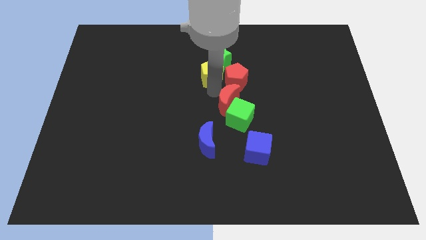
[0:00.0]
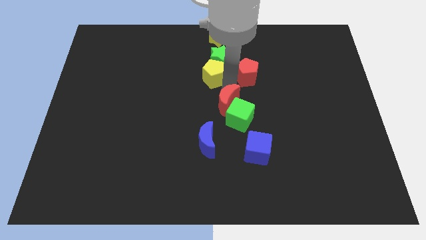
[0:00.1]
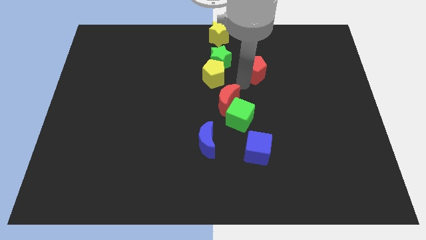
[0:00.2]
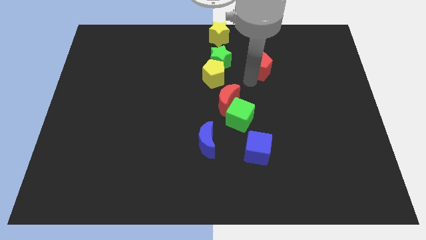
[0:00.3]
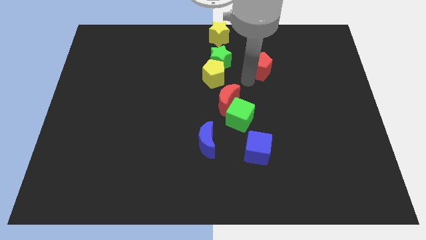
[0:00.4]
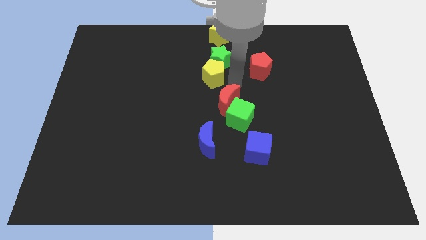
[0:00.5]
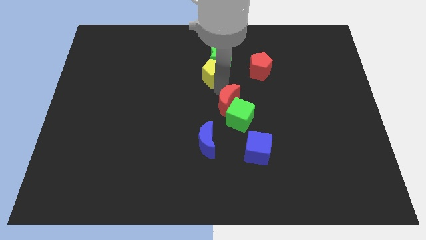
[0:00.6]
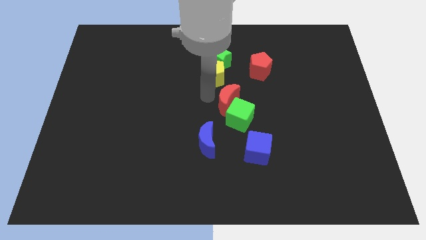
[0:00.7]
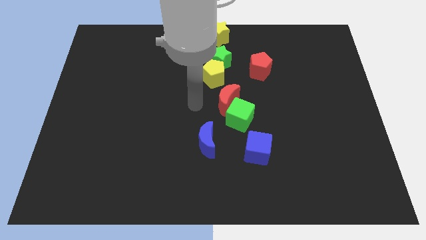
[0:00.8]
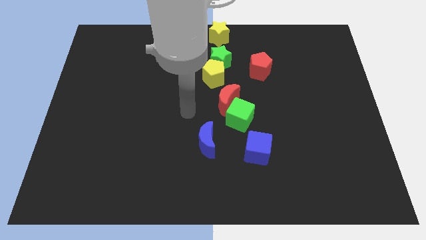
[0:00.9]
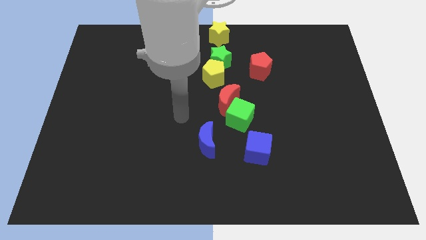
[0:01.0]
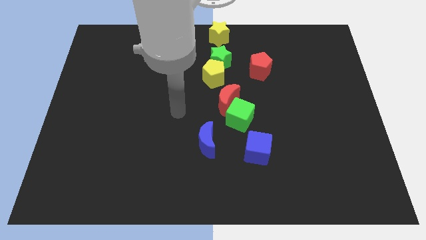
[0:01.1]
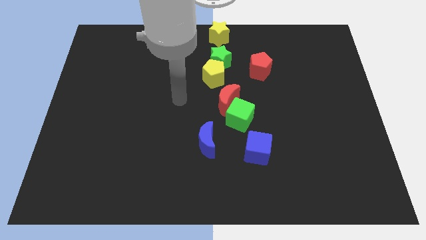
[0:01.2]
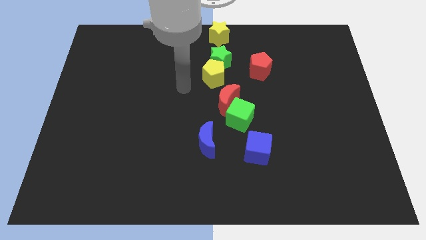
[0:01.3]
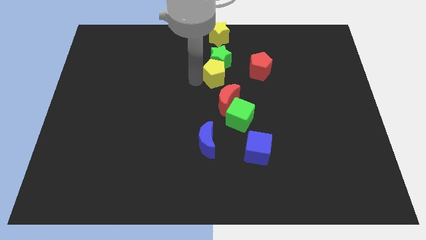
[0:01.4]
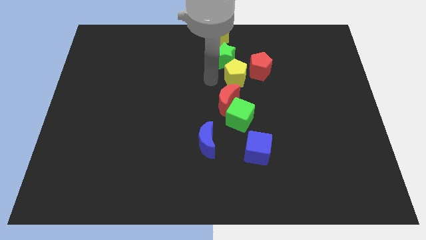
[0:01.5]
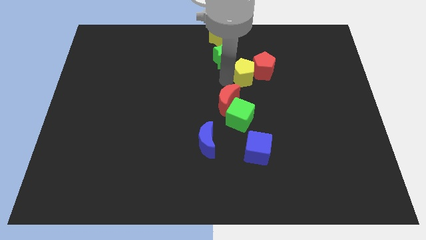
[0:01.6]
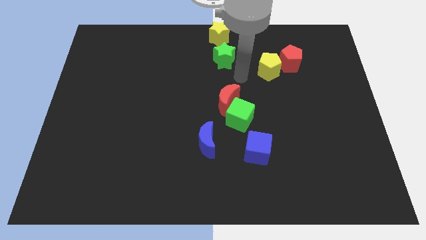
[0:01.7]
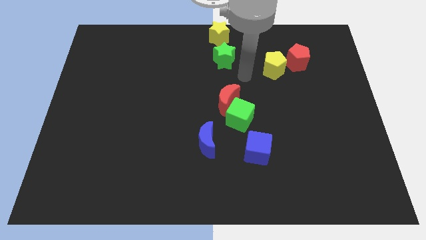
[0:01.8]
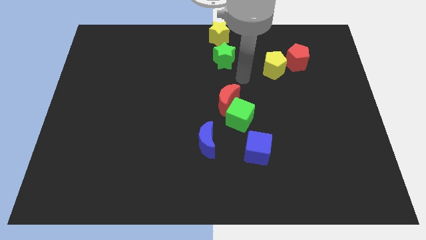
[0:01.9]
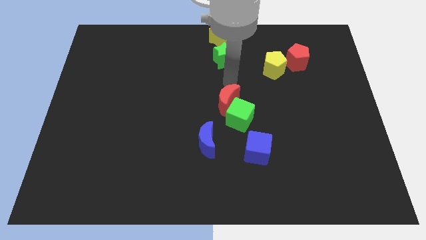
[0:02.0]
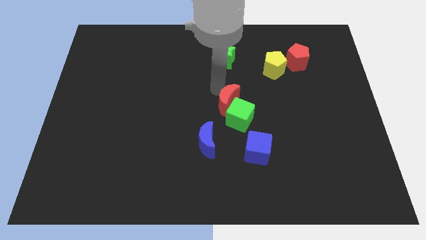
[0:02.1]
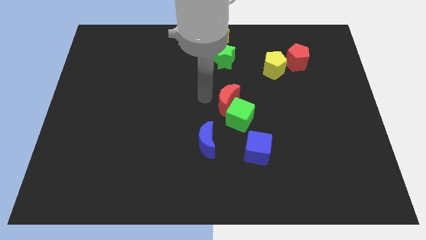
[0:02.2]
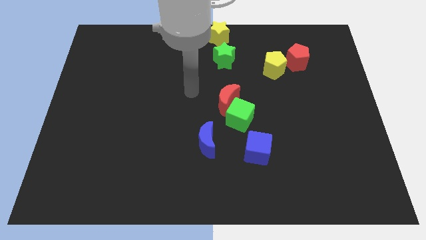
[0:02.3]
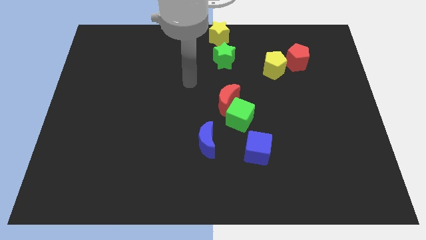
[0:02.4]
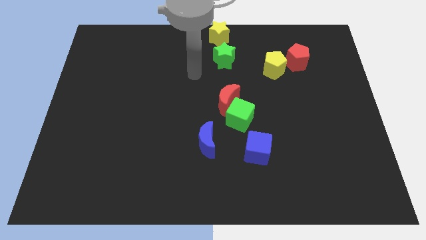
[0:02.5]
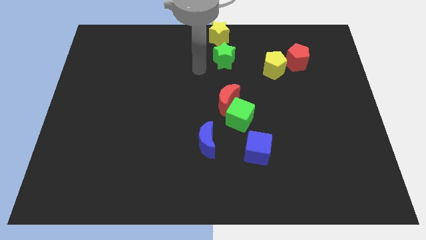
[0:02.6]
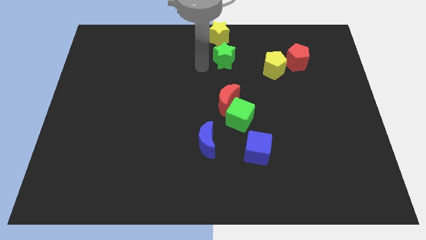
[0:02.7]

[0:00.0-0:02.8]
push yellow and red pentagons towards the top right corner of the board

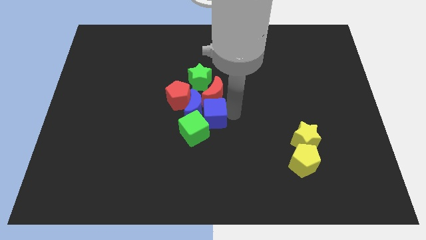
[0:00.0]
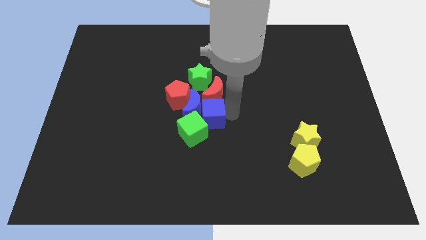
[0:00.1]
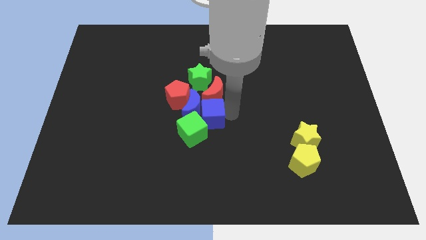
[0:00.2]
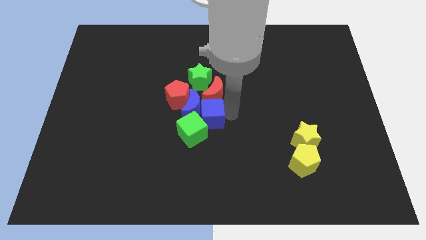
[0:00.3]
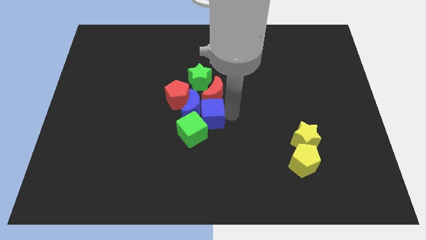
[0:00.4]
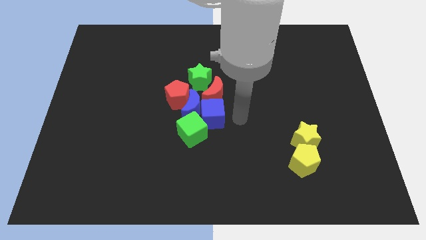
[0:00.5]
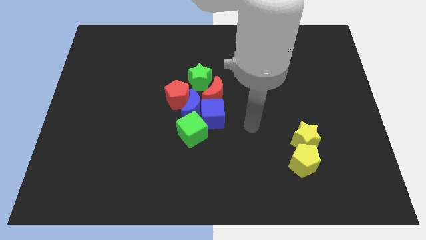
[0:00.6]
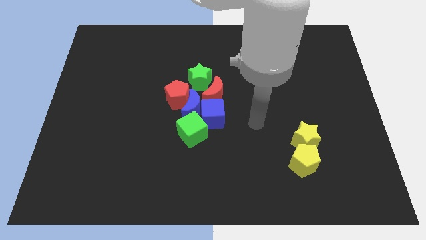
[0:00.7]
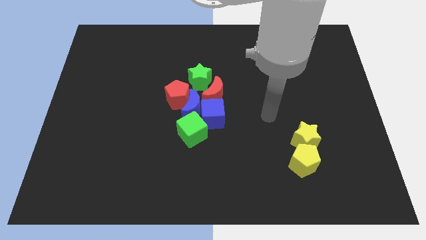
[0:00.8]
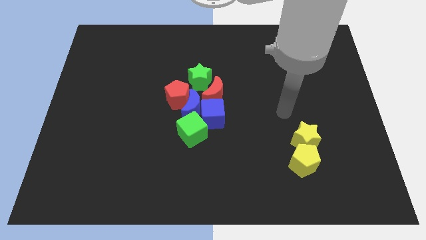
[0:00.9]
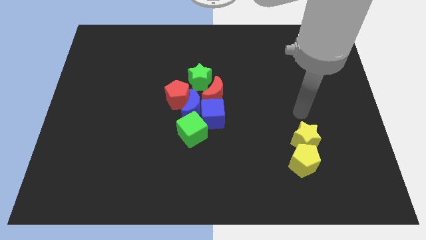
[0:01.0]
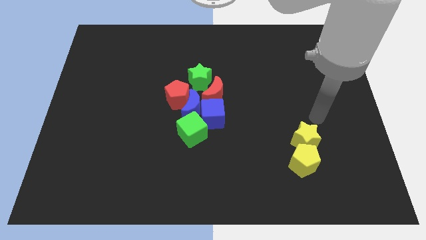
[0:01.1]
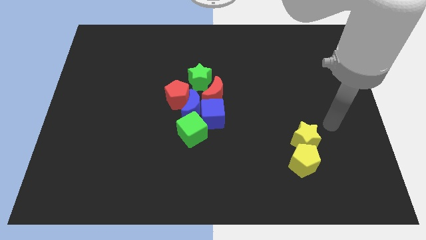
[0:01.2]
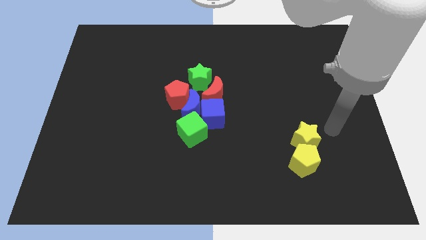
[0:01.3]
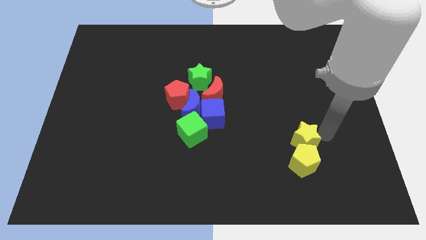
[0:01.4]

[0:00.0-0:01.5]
move your arm away from blue cube

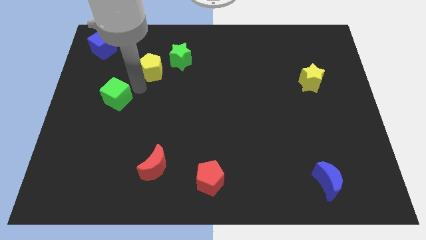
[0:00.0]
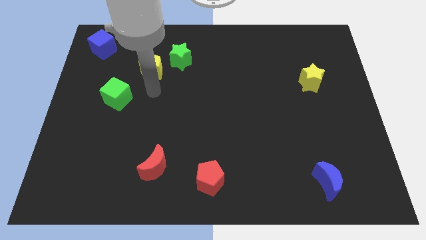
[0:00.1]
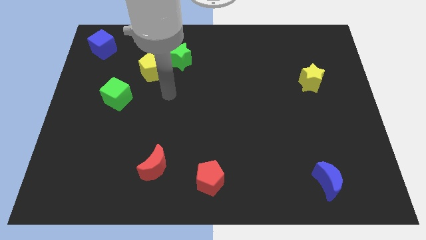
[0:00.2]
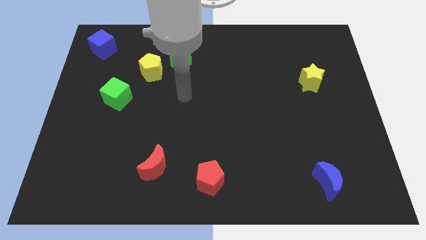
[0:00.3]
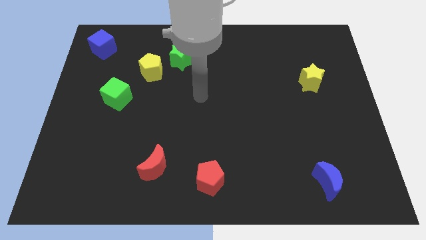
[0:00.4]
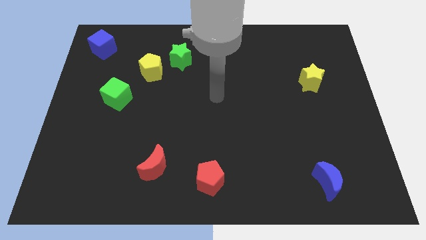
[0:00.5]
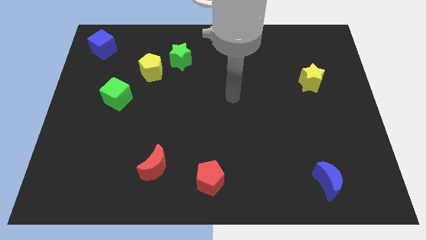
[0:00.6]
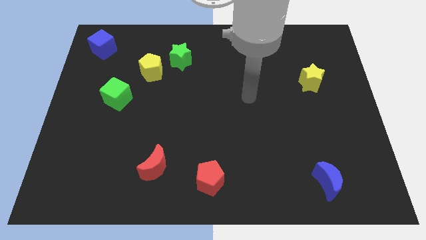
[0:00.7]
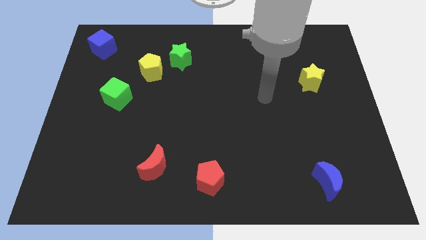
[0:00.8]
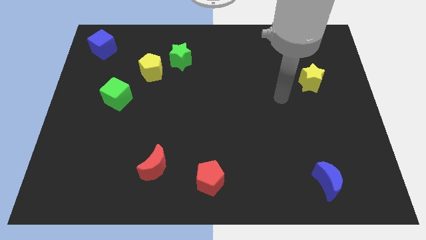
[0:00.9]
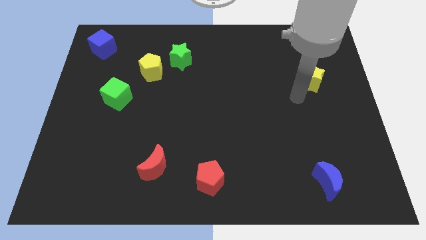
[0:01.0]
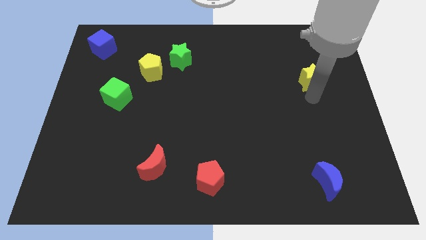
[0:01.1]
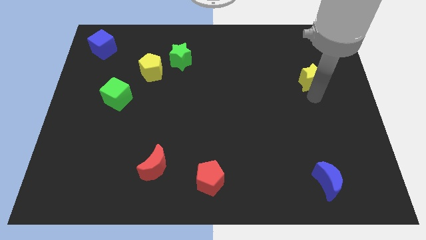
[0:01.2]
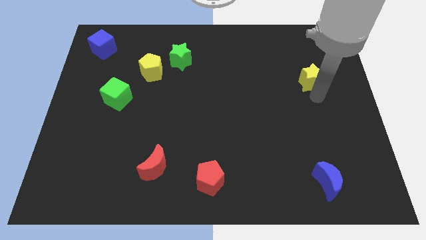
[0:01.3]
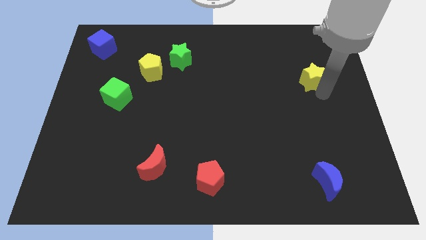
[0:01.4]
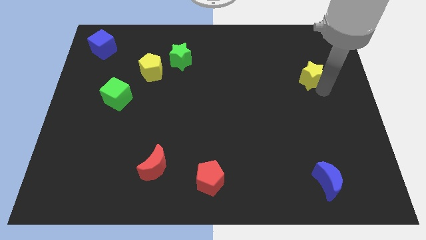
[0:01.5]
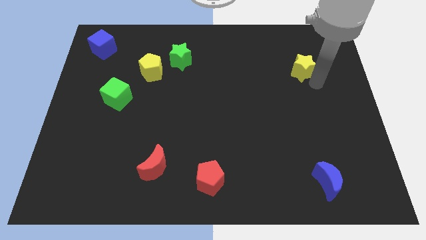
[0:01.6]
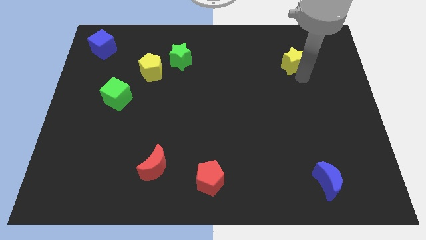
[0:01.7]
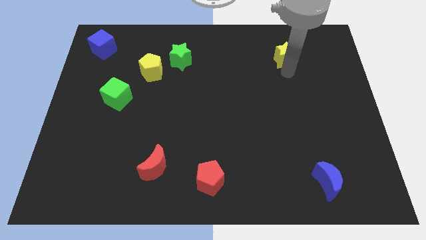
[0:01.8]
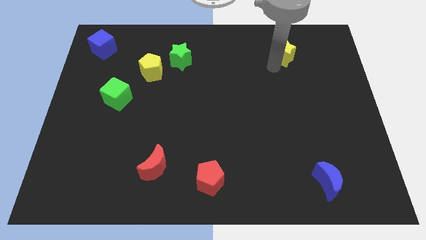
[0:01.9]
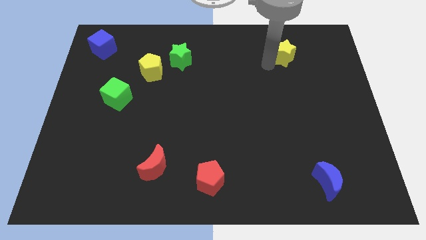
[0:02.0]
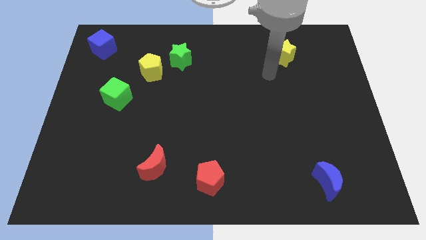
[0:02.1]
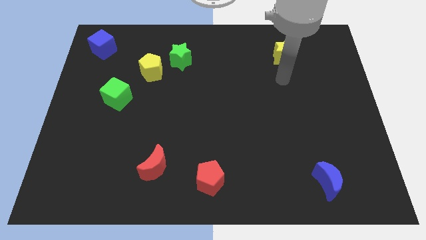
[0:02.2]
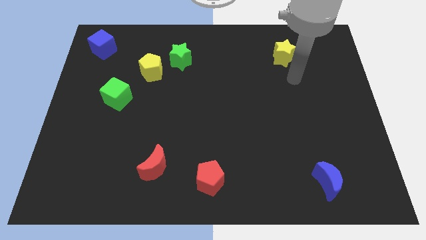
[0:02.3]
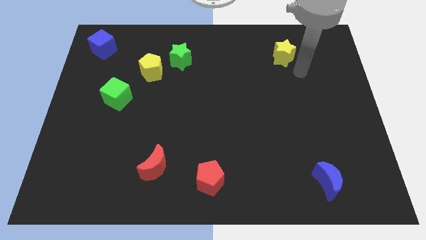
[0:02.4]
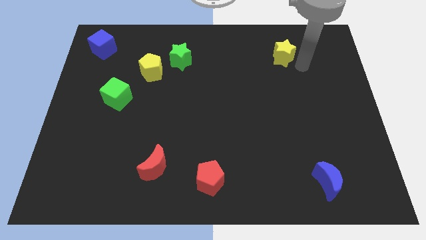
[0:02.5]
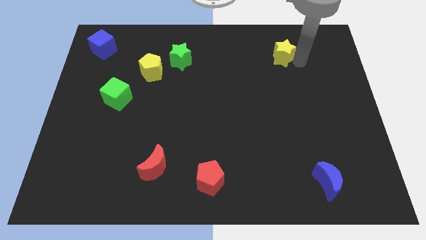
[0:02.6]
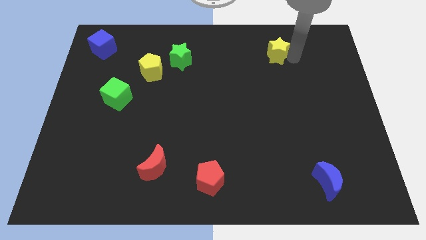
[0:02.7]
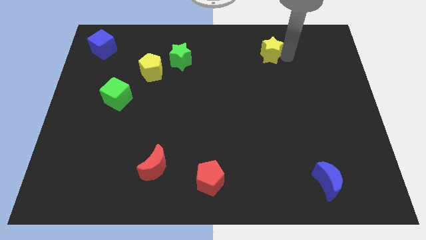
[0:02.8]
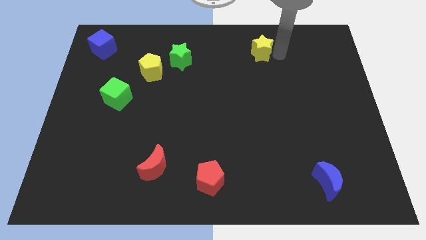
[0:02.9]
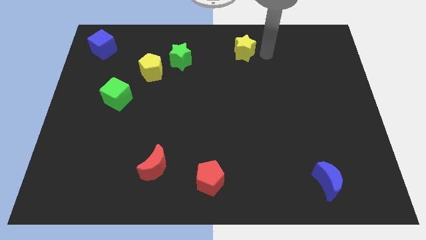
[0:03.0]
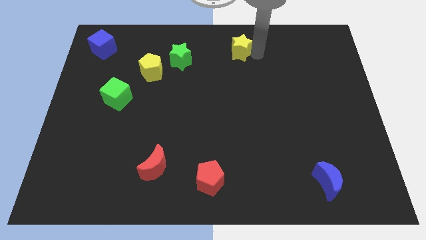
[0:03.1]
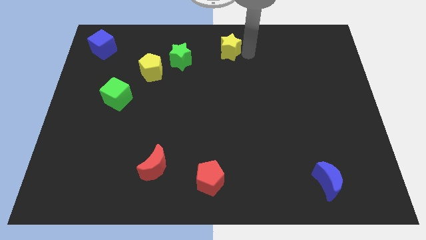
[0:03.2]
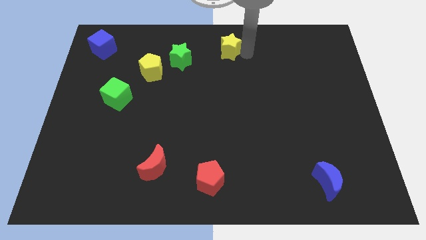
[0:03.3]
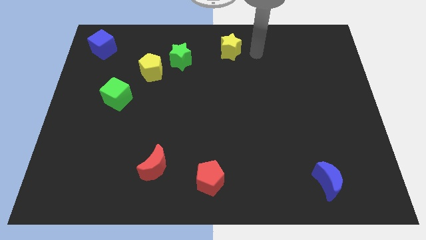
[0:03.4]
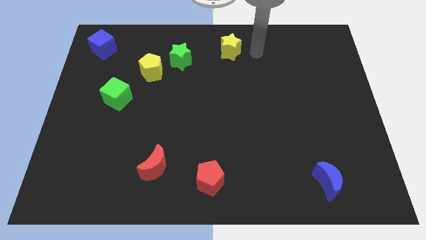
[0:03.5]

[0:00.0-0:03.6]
move the yellow star towards the top center of the board

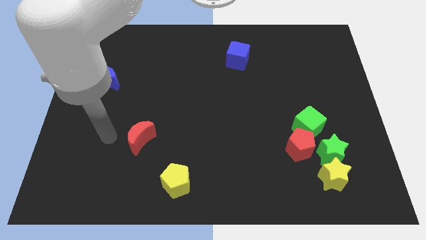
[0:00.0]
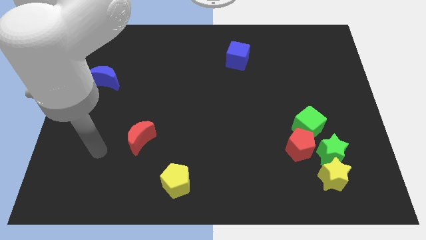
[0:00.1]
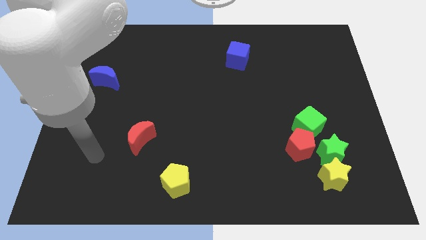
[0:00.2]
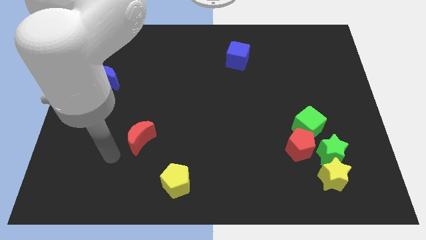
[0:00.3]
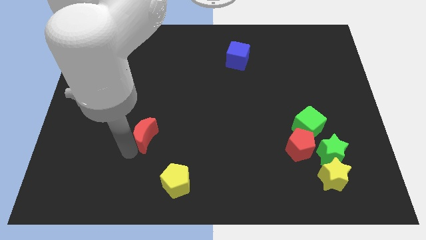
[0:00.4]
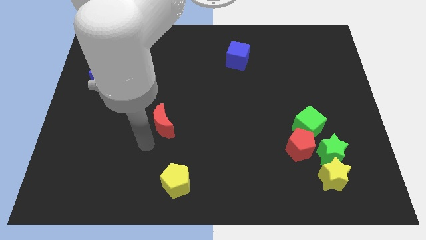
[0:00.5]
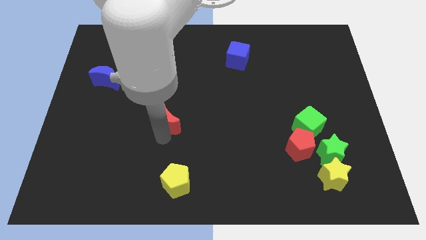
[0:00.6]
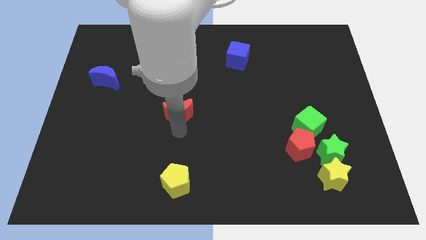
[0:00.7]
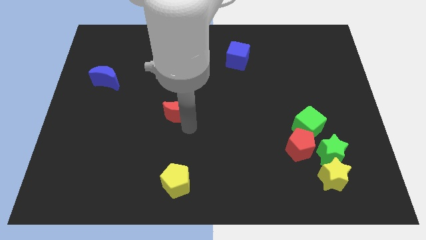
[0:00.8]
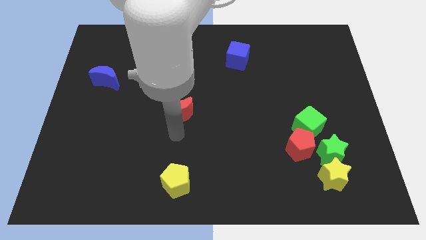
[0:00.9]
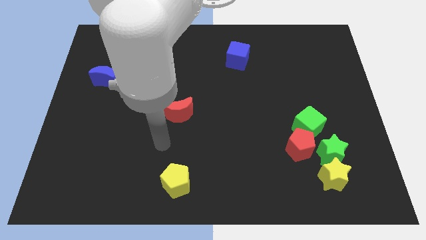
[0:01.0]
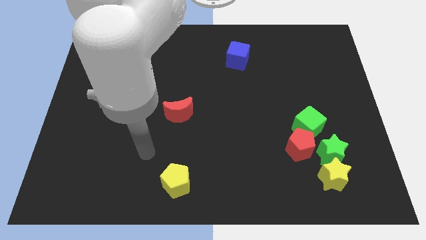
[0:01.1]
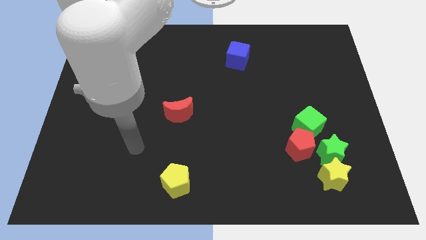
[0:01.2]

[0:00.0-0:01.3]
push red crescent upwards
